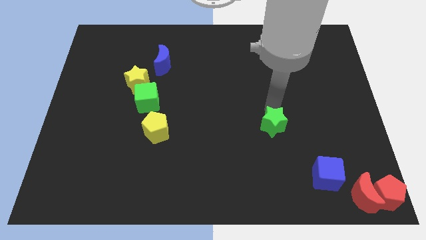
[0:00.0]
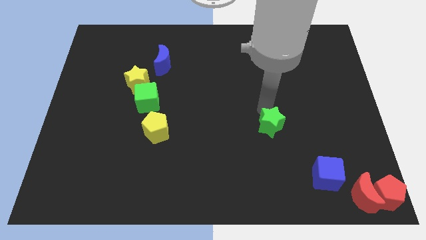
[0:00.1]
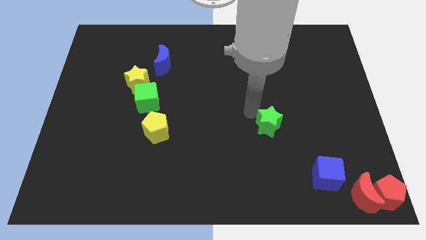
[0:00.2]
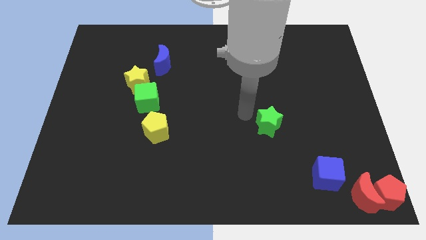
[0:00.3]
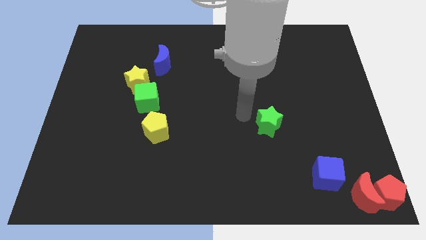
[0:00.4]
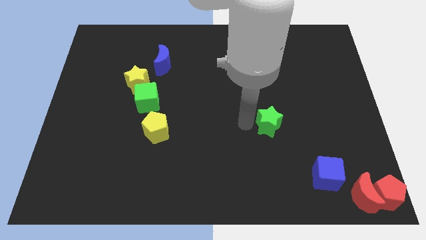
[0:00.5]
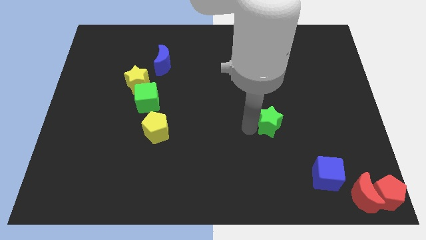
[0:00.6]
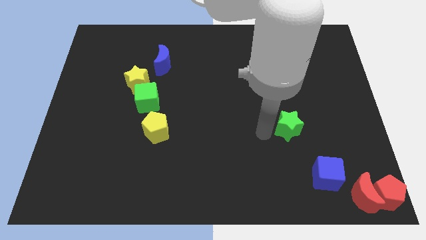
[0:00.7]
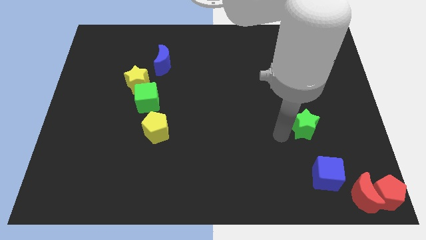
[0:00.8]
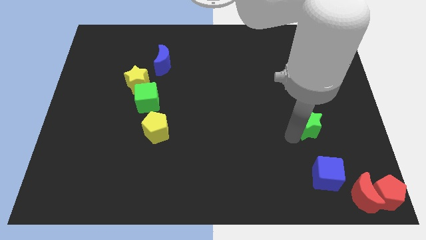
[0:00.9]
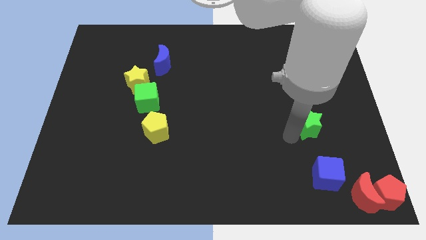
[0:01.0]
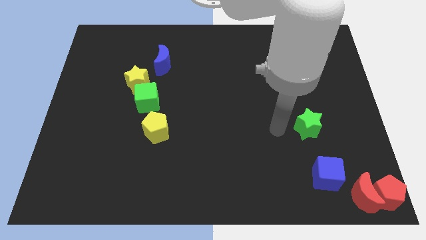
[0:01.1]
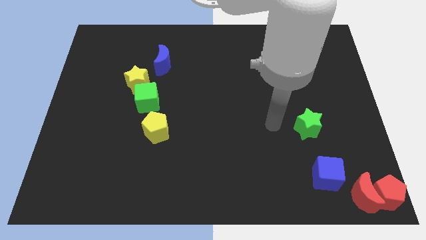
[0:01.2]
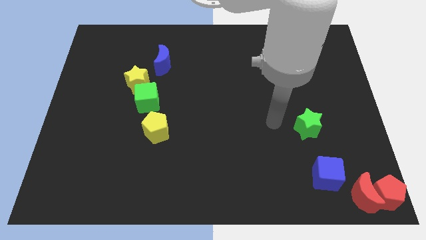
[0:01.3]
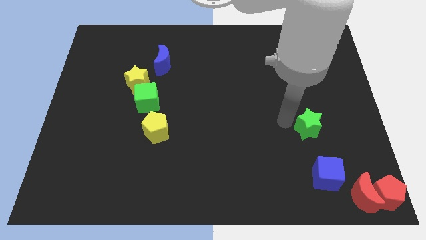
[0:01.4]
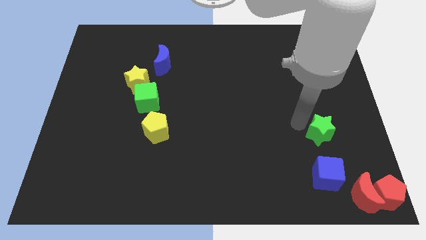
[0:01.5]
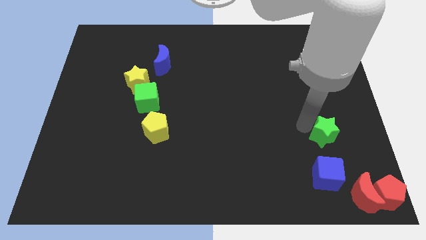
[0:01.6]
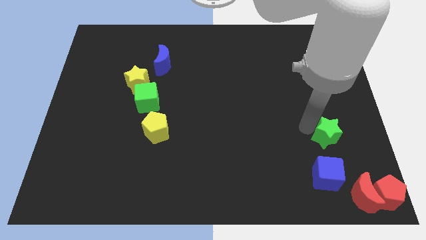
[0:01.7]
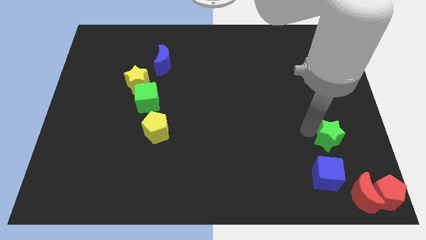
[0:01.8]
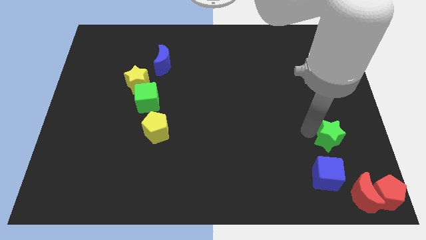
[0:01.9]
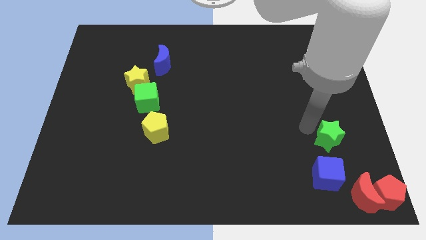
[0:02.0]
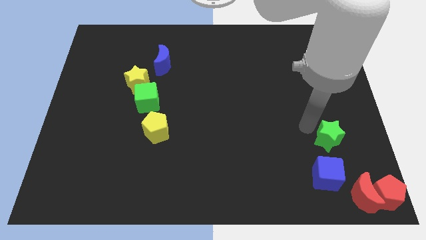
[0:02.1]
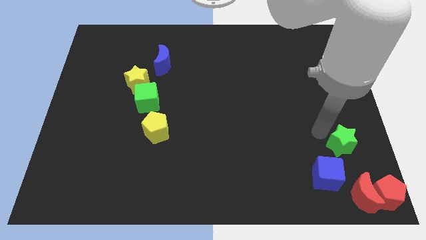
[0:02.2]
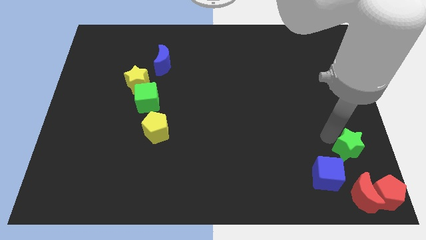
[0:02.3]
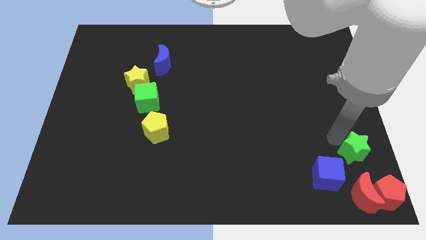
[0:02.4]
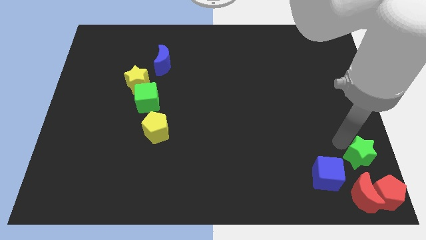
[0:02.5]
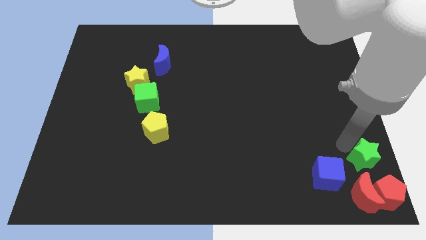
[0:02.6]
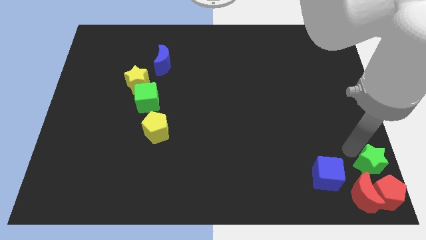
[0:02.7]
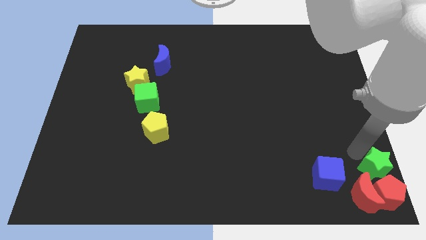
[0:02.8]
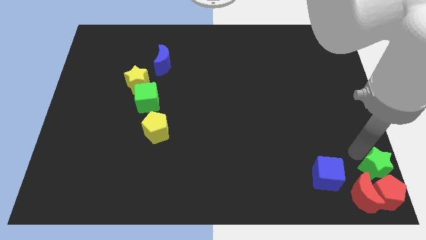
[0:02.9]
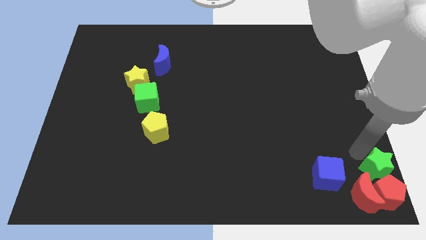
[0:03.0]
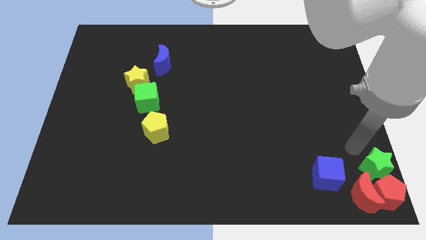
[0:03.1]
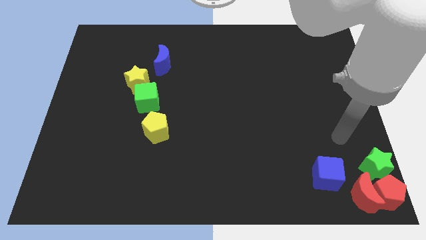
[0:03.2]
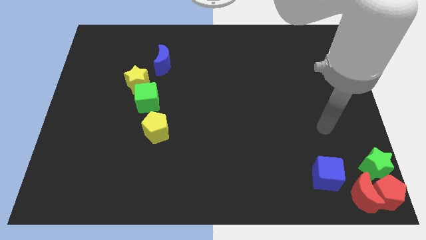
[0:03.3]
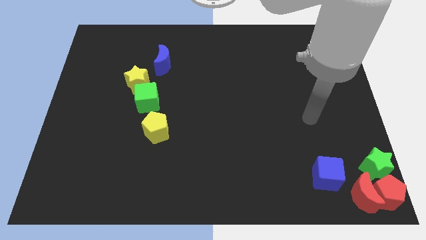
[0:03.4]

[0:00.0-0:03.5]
place the green star at the top side of the red blocks

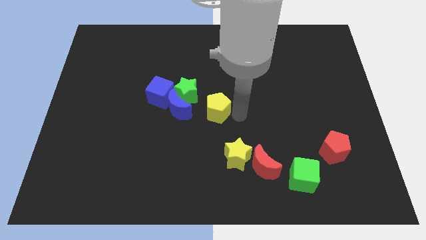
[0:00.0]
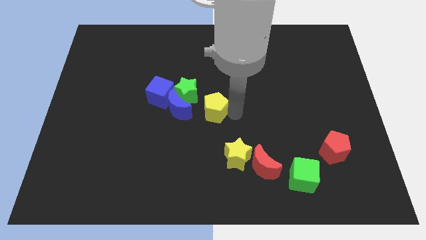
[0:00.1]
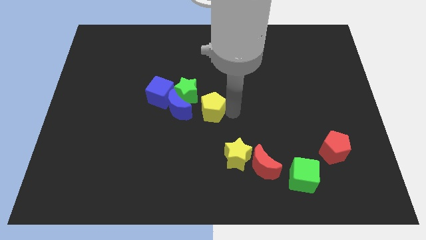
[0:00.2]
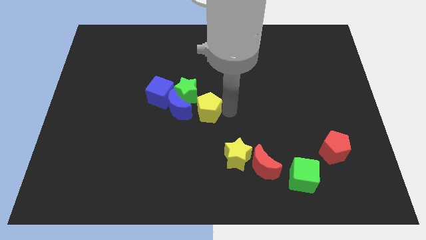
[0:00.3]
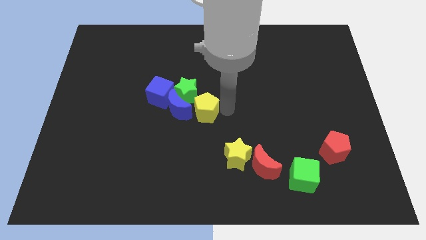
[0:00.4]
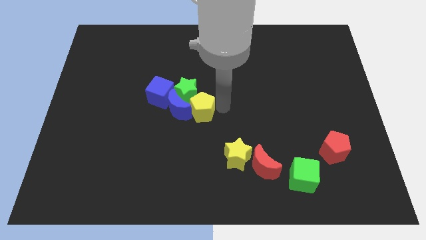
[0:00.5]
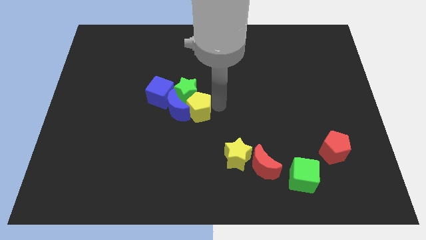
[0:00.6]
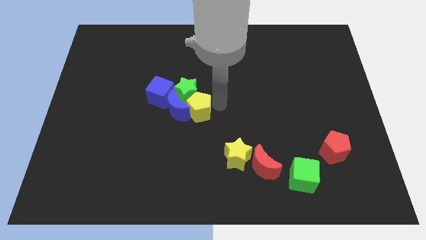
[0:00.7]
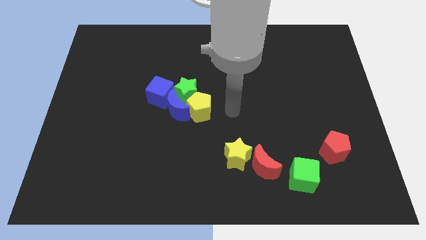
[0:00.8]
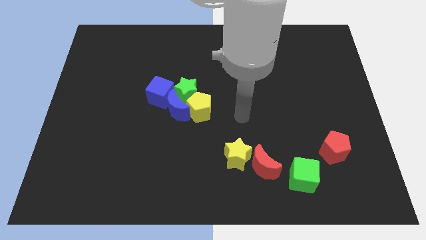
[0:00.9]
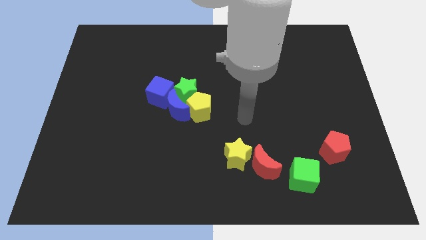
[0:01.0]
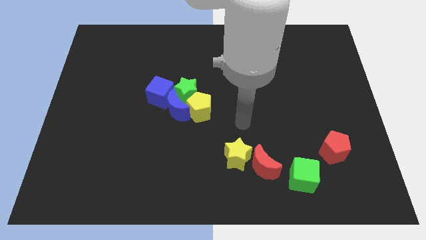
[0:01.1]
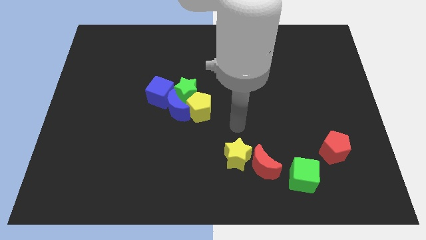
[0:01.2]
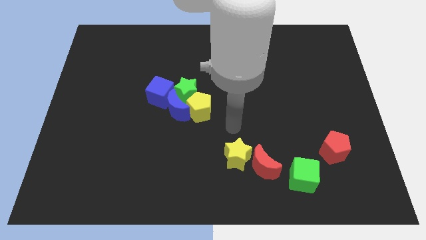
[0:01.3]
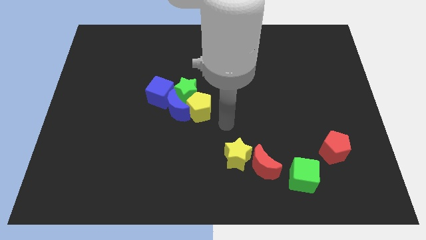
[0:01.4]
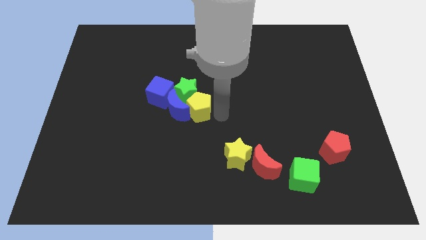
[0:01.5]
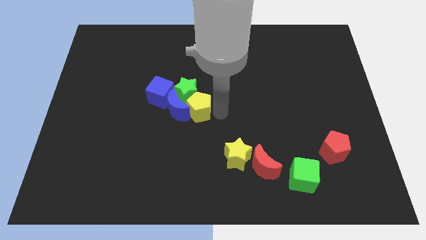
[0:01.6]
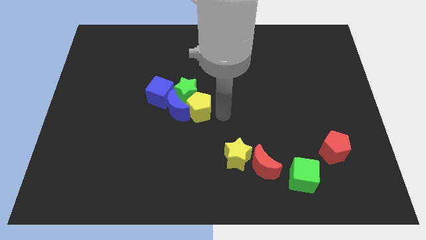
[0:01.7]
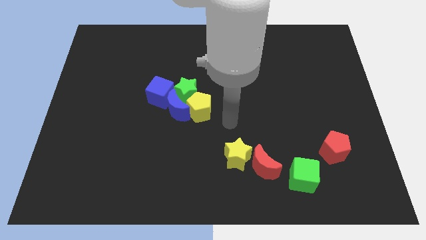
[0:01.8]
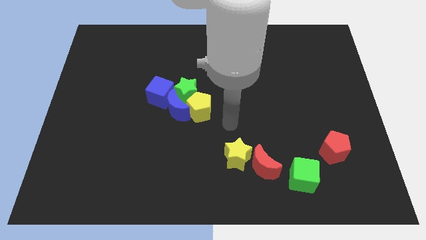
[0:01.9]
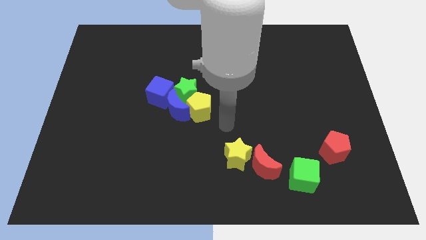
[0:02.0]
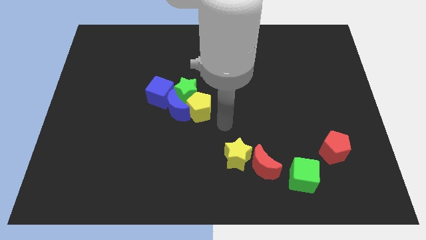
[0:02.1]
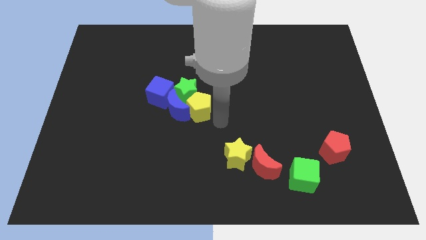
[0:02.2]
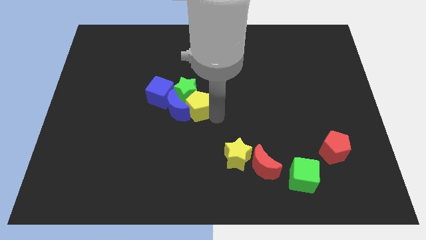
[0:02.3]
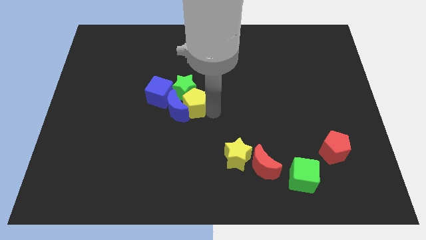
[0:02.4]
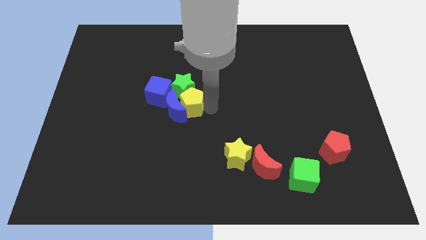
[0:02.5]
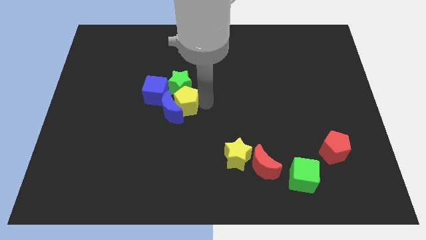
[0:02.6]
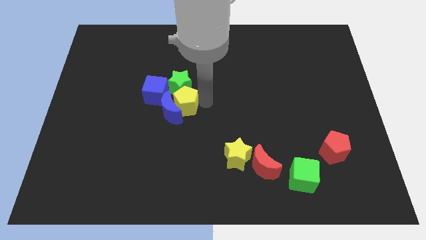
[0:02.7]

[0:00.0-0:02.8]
move the yellow pentagon on the right side of the blue moon

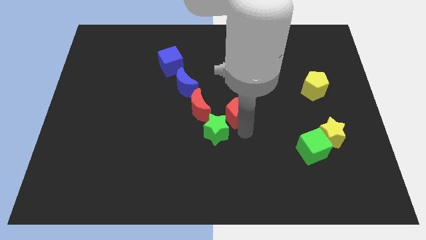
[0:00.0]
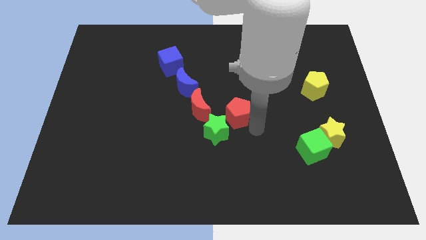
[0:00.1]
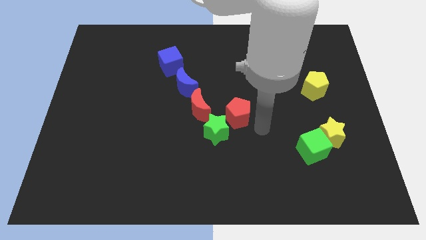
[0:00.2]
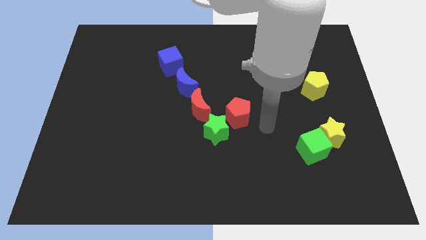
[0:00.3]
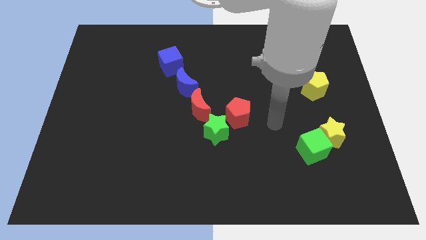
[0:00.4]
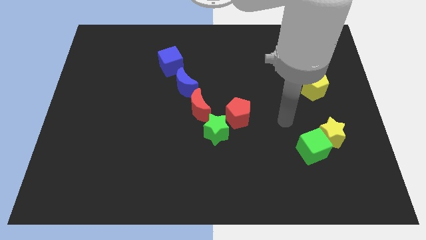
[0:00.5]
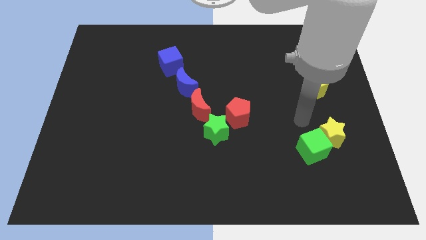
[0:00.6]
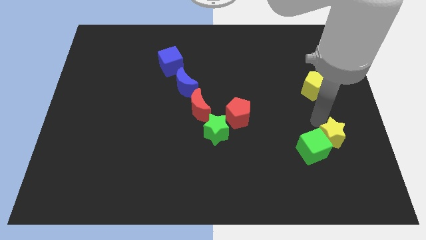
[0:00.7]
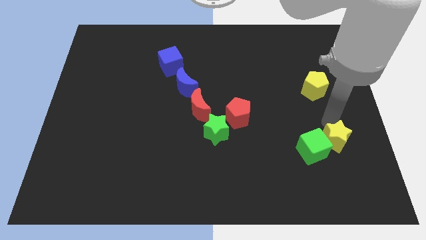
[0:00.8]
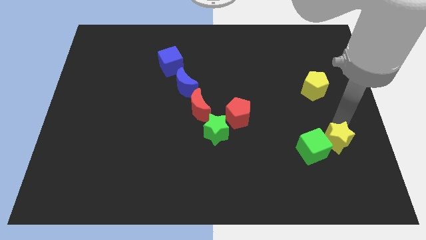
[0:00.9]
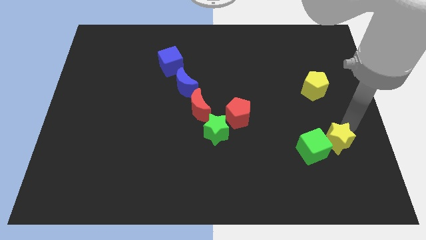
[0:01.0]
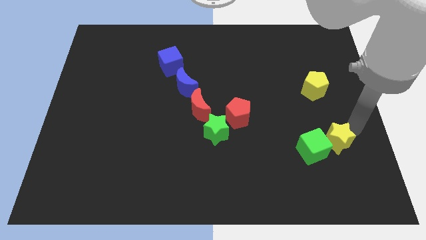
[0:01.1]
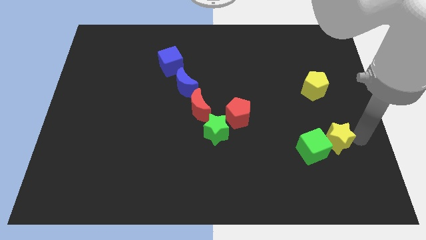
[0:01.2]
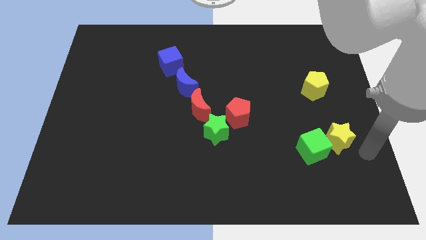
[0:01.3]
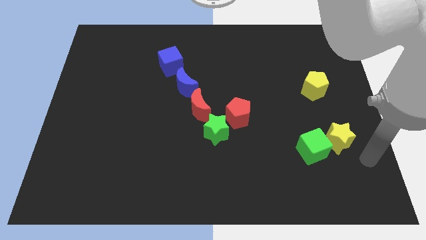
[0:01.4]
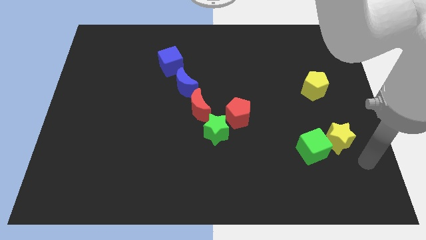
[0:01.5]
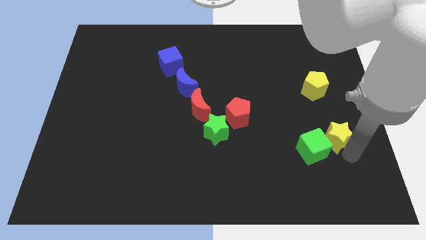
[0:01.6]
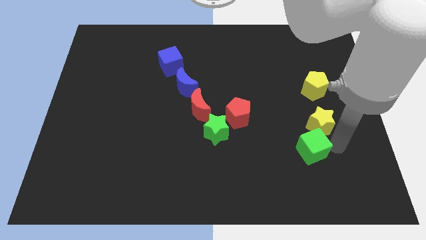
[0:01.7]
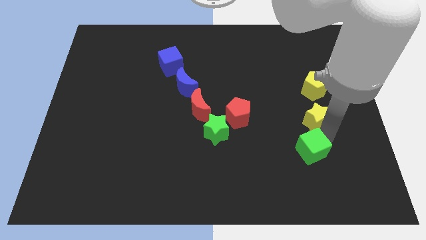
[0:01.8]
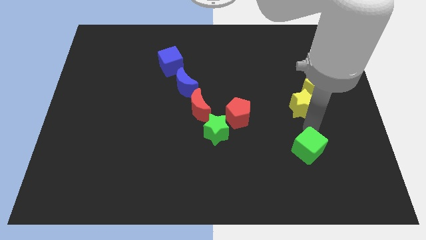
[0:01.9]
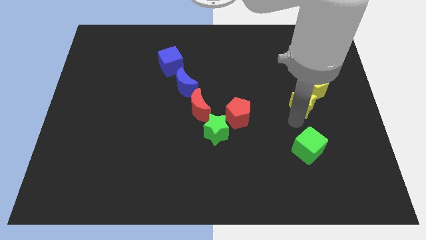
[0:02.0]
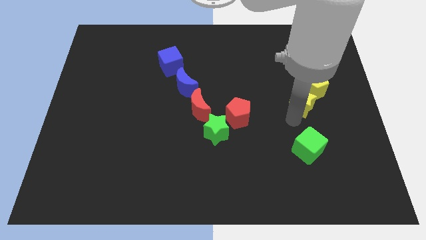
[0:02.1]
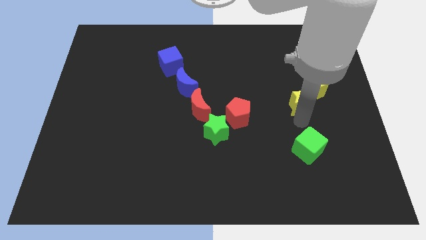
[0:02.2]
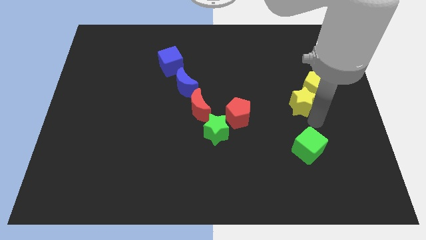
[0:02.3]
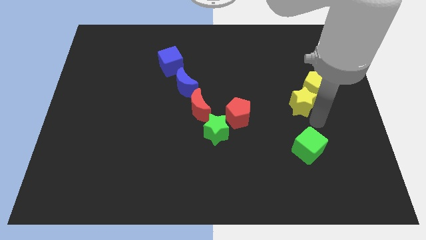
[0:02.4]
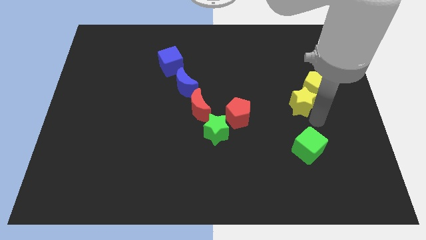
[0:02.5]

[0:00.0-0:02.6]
push the yellow star to the bottom left of the yellow pentagon
